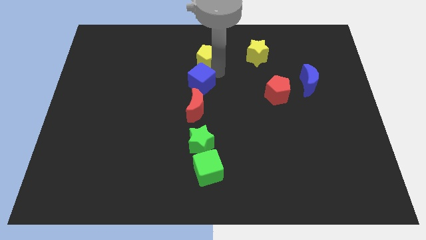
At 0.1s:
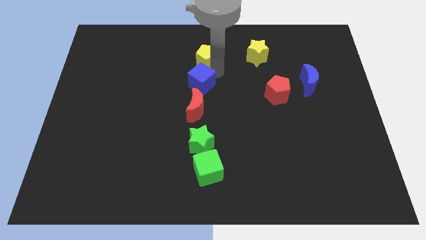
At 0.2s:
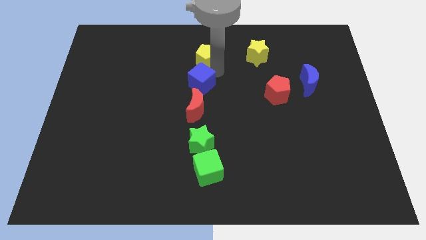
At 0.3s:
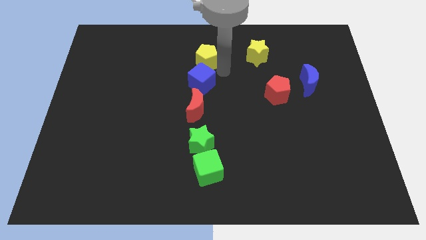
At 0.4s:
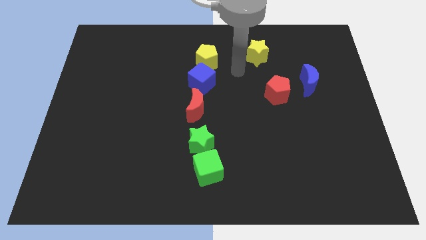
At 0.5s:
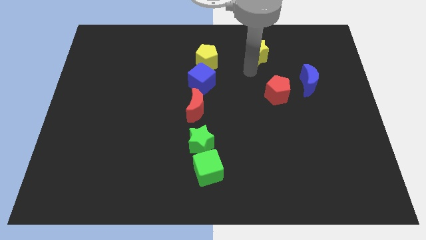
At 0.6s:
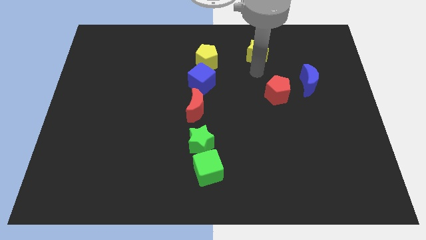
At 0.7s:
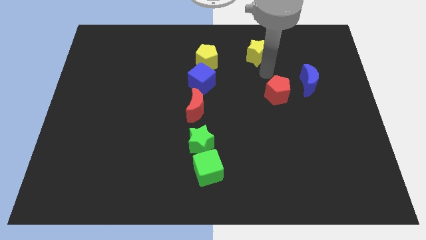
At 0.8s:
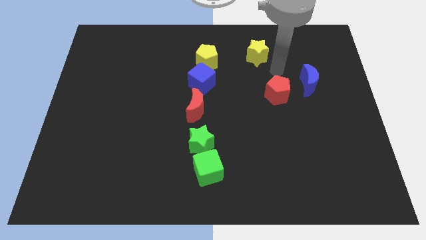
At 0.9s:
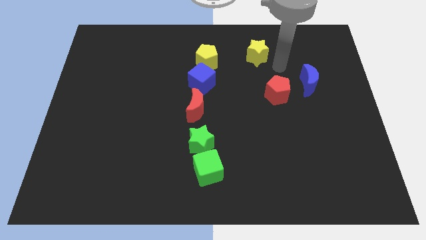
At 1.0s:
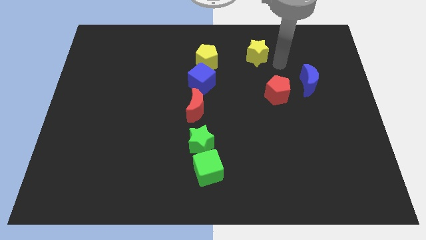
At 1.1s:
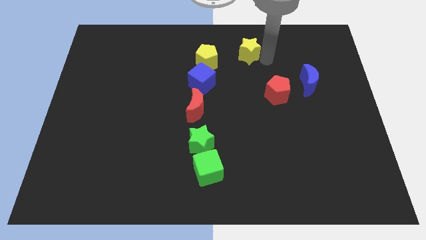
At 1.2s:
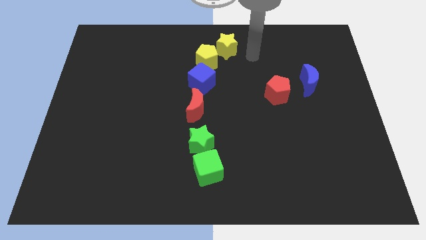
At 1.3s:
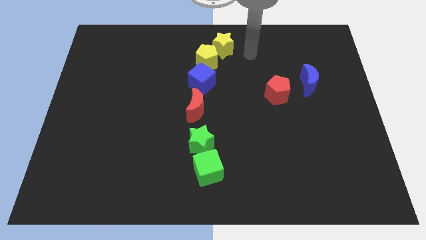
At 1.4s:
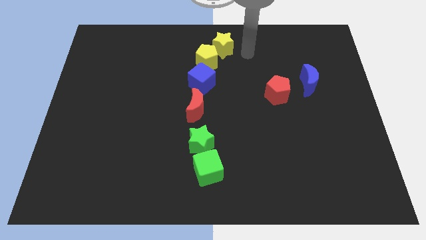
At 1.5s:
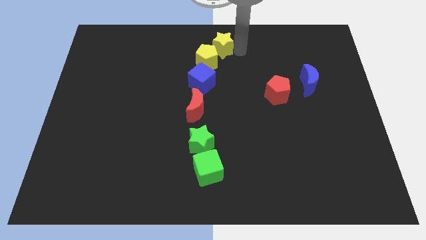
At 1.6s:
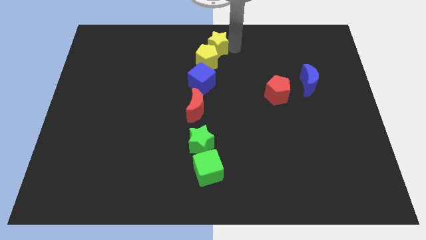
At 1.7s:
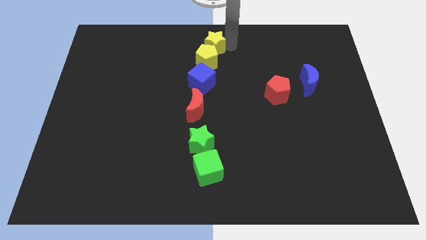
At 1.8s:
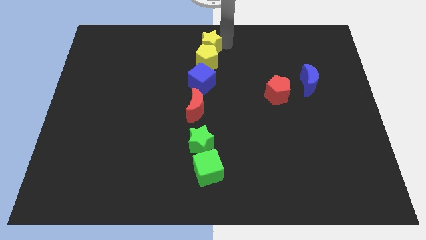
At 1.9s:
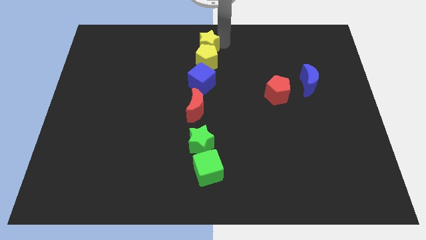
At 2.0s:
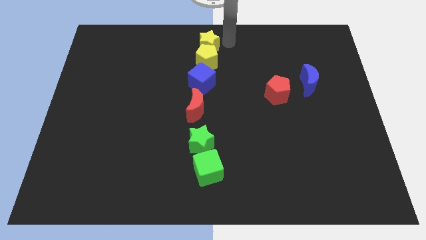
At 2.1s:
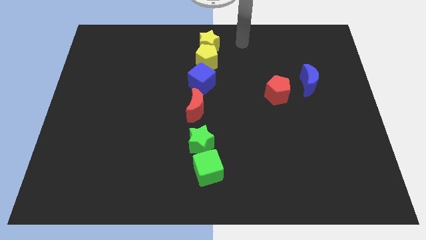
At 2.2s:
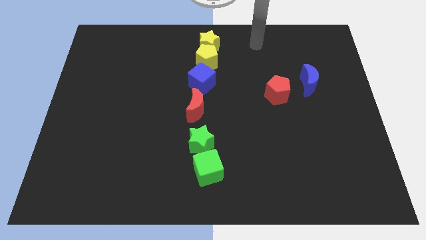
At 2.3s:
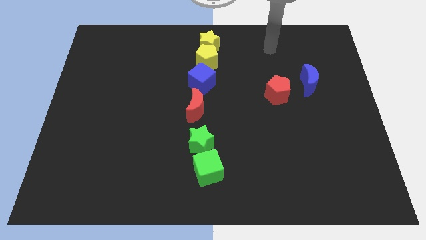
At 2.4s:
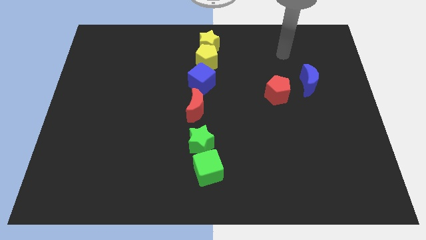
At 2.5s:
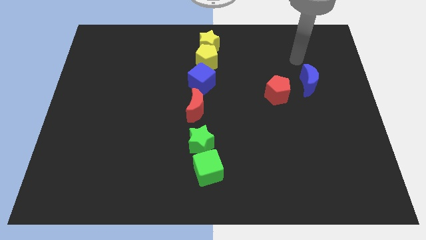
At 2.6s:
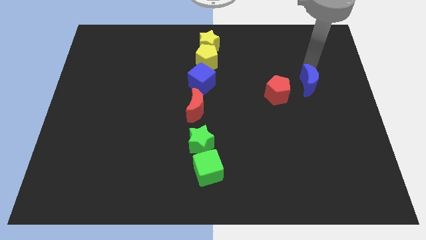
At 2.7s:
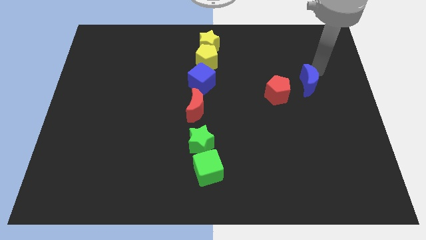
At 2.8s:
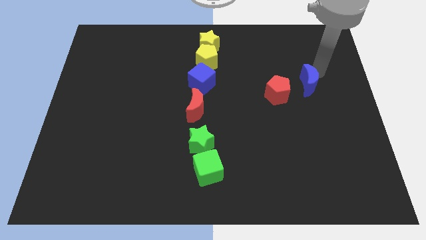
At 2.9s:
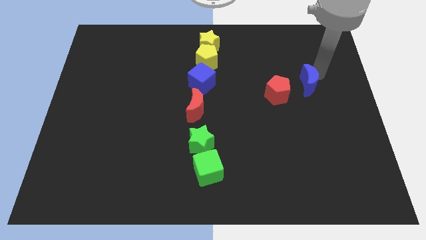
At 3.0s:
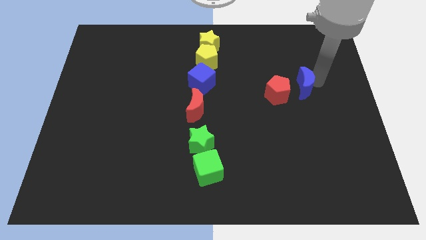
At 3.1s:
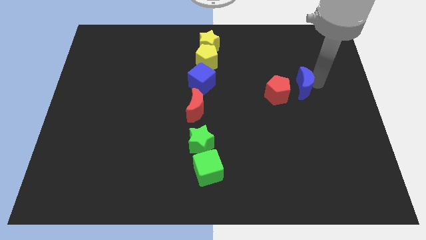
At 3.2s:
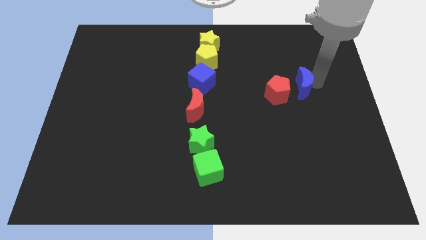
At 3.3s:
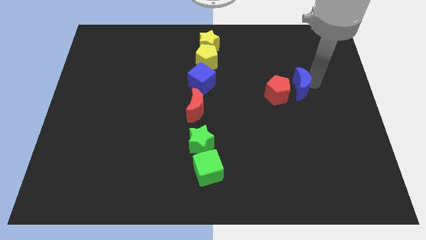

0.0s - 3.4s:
slide the yellow star to the top center

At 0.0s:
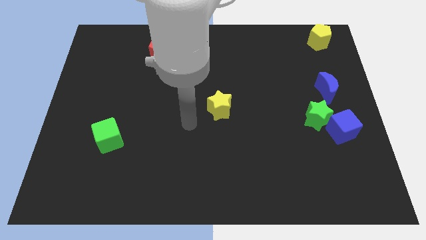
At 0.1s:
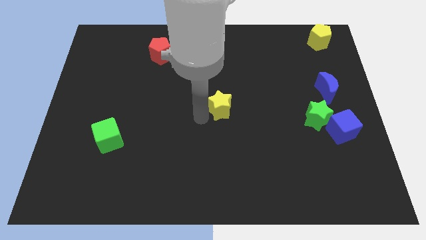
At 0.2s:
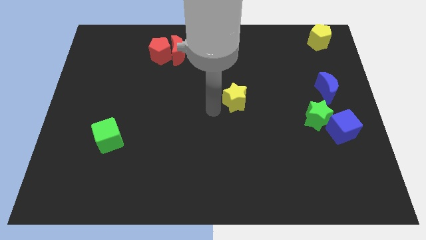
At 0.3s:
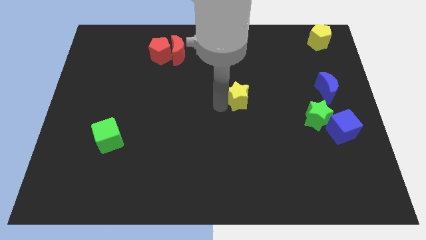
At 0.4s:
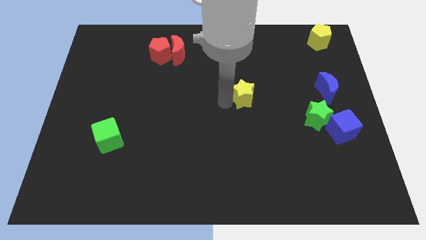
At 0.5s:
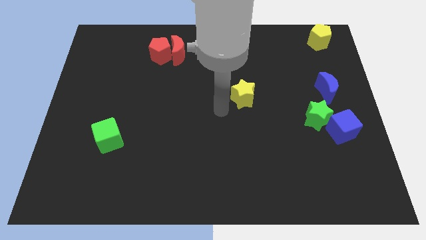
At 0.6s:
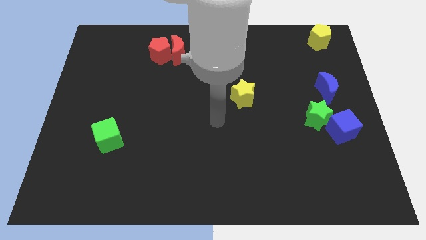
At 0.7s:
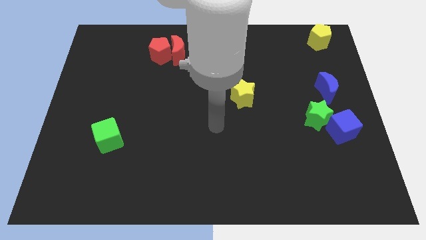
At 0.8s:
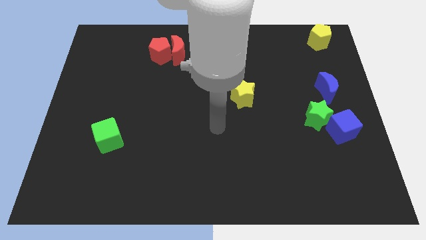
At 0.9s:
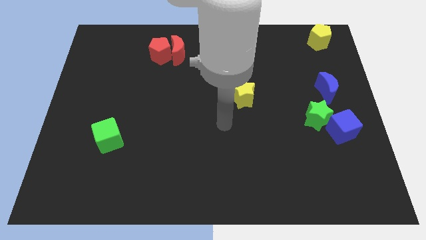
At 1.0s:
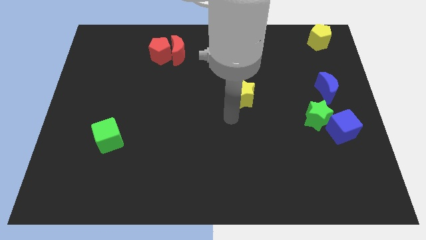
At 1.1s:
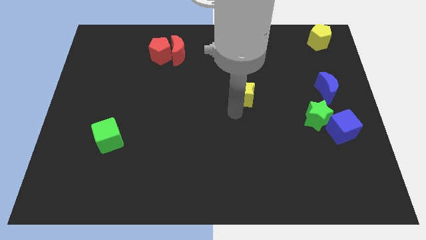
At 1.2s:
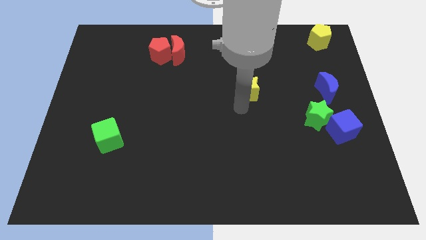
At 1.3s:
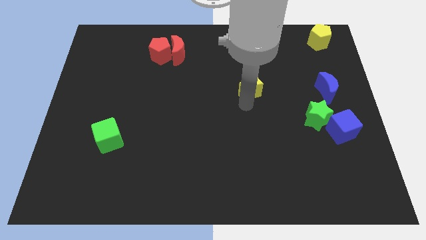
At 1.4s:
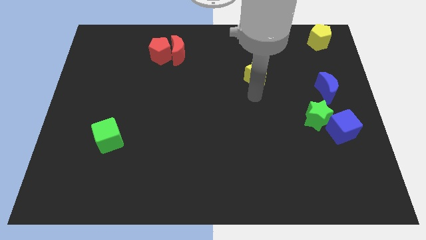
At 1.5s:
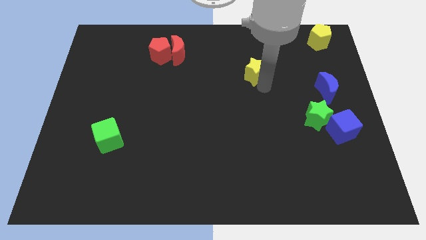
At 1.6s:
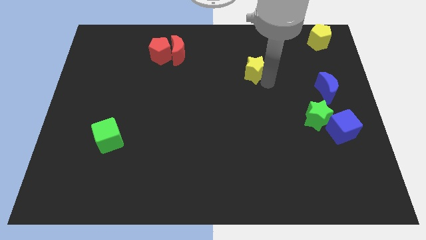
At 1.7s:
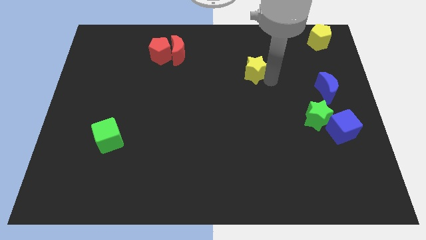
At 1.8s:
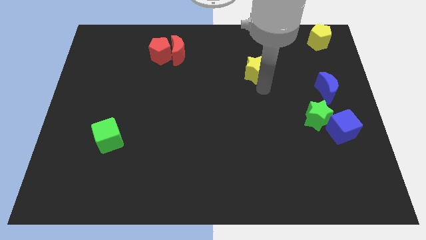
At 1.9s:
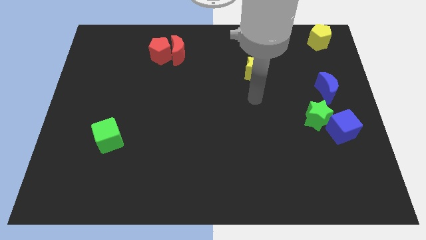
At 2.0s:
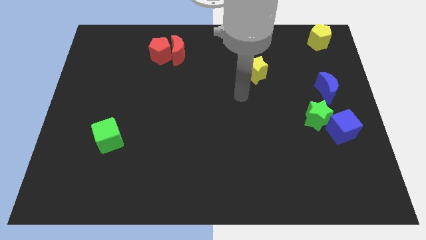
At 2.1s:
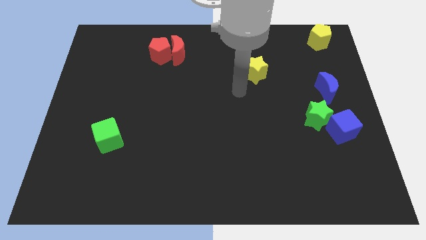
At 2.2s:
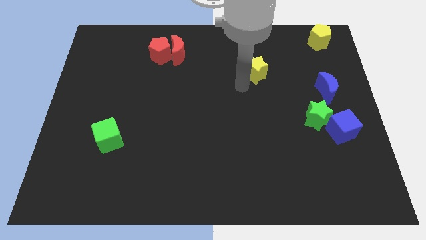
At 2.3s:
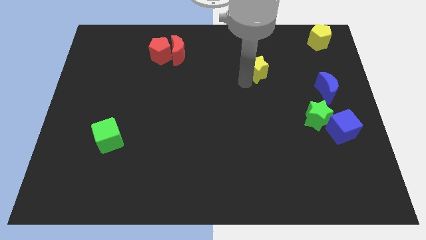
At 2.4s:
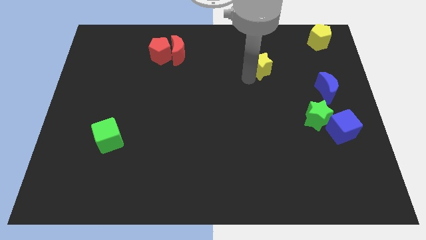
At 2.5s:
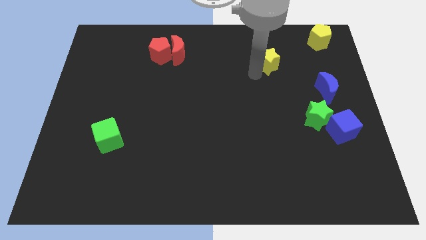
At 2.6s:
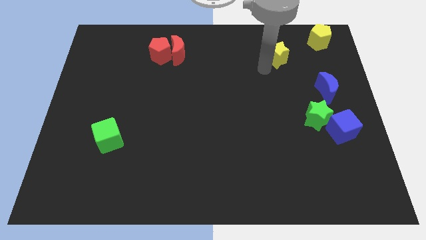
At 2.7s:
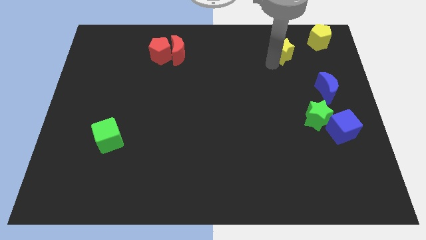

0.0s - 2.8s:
push the yellow star to the top right of the board

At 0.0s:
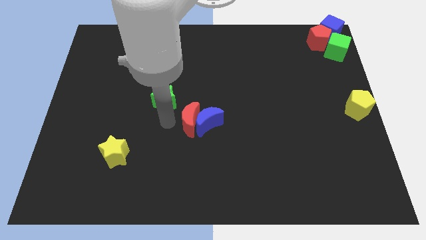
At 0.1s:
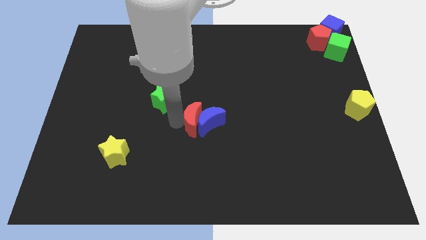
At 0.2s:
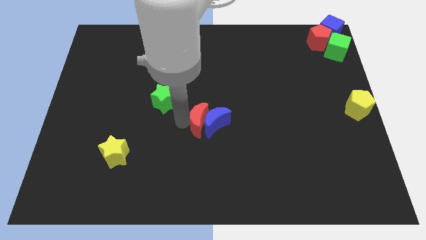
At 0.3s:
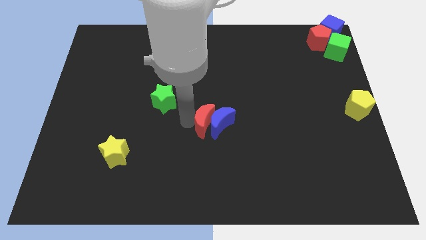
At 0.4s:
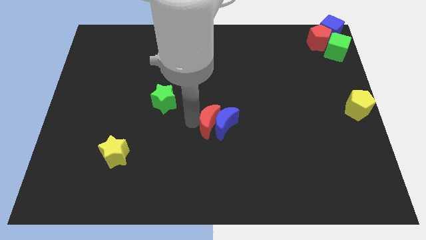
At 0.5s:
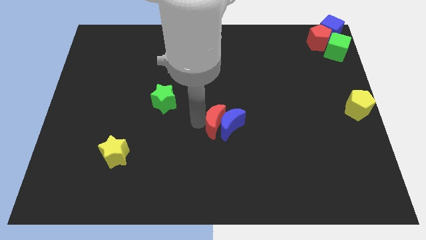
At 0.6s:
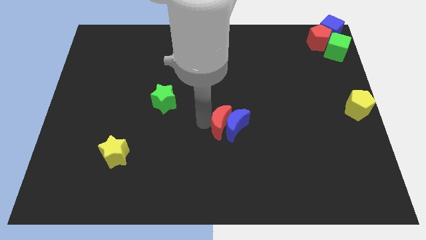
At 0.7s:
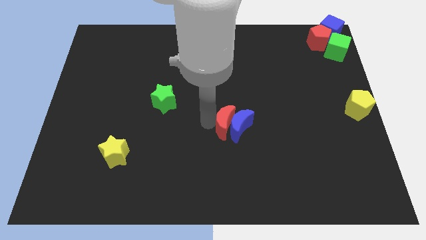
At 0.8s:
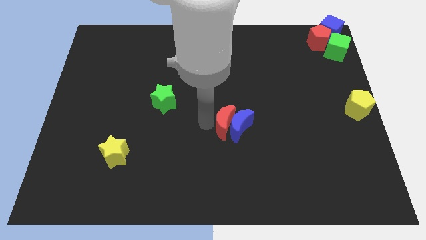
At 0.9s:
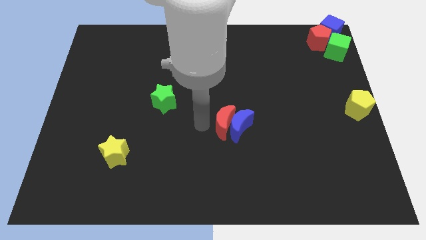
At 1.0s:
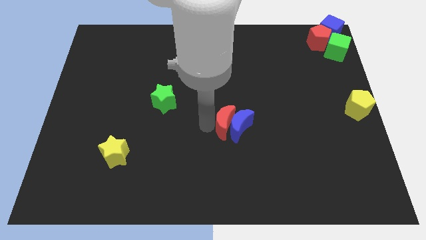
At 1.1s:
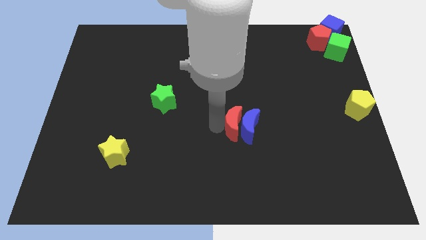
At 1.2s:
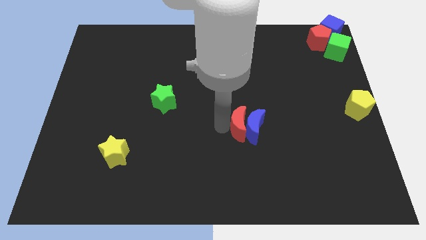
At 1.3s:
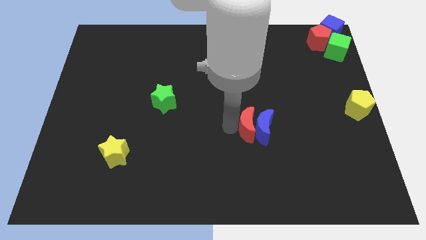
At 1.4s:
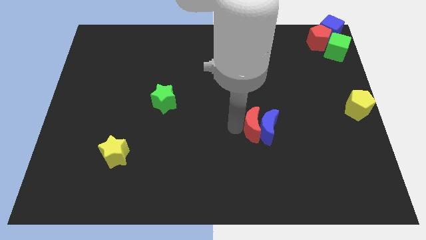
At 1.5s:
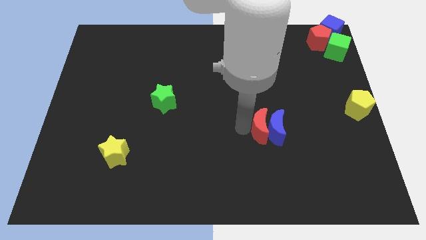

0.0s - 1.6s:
push the red crescent and blue crescent towards the center right side of the board

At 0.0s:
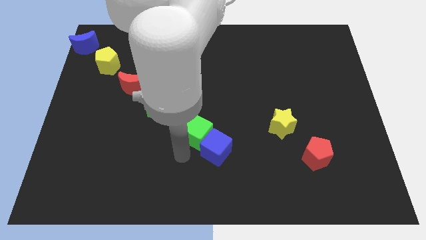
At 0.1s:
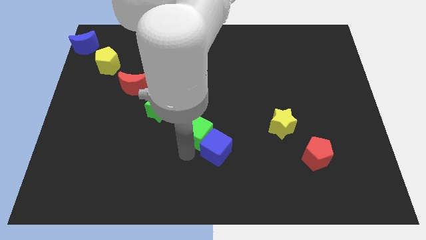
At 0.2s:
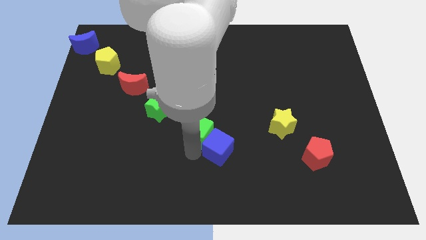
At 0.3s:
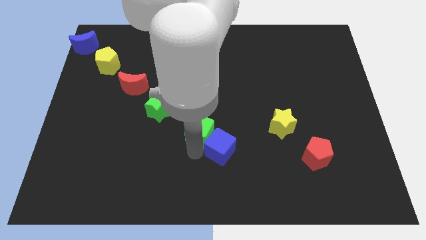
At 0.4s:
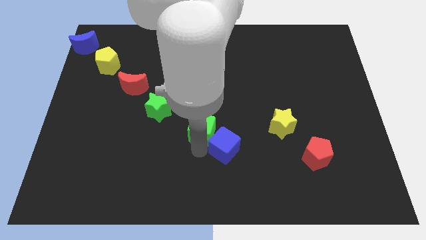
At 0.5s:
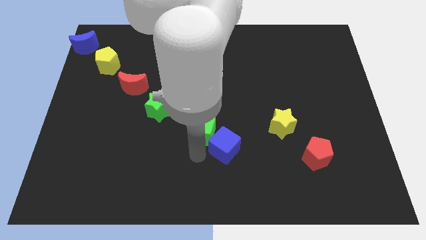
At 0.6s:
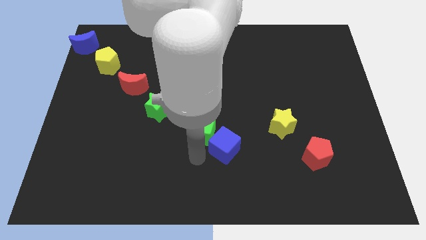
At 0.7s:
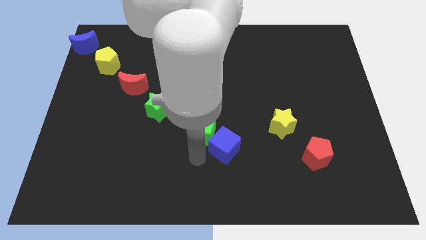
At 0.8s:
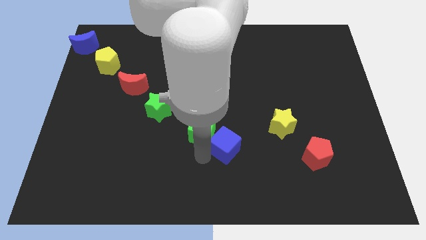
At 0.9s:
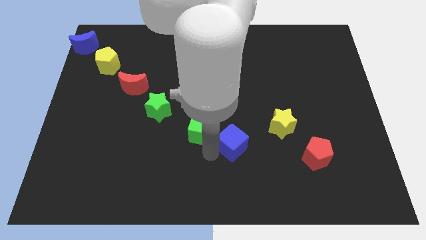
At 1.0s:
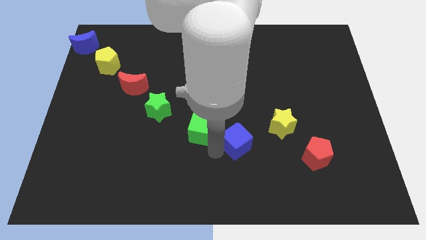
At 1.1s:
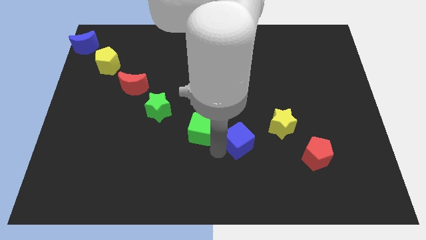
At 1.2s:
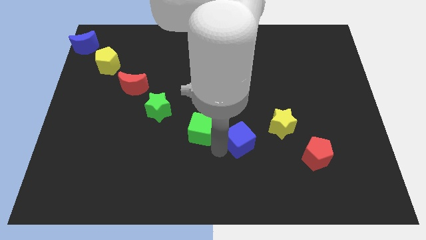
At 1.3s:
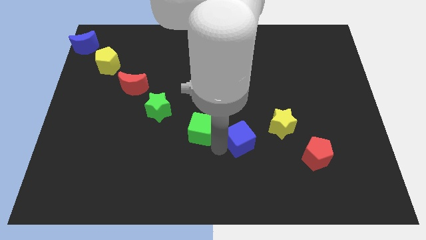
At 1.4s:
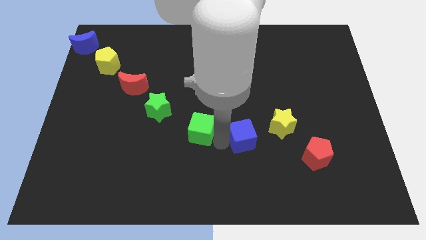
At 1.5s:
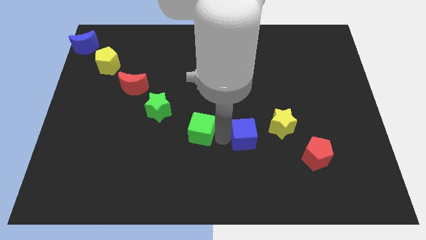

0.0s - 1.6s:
separate the blue cube and green cube from each other
